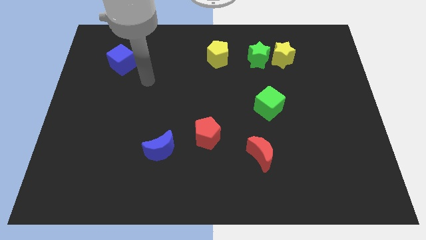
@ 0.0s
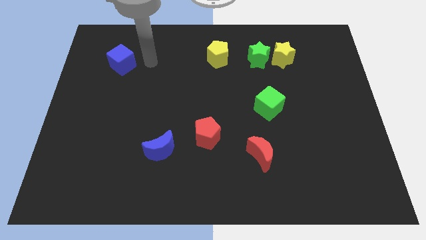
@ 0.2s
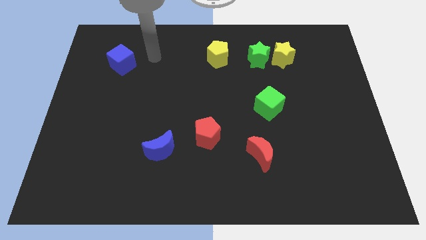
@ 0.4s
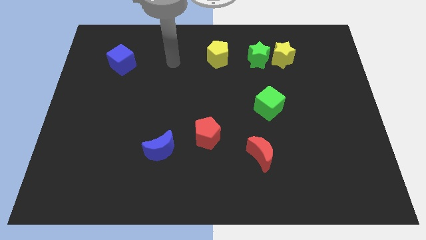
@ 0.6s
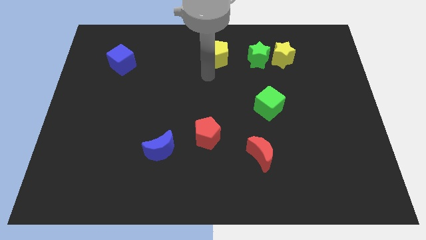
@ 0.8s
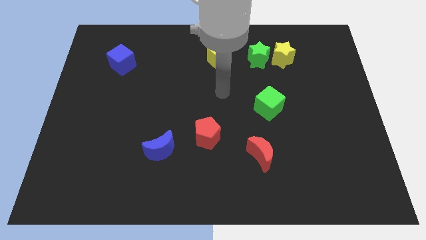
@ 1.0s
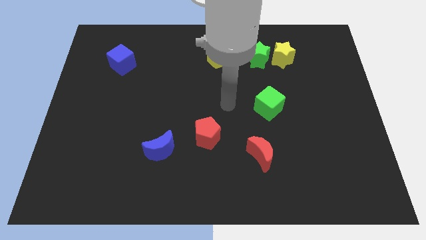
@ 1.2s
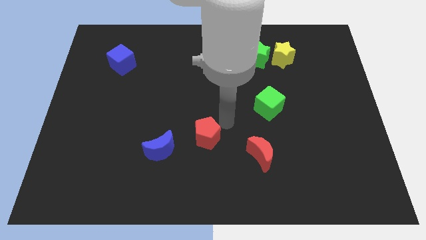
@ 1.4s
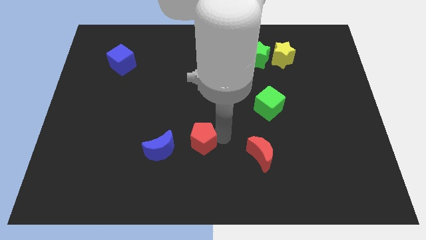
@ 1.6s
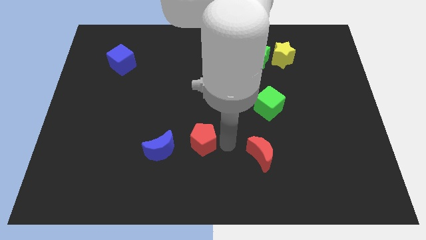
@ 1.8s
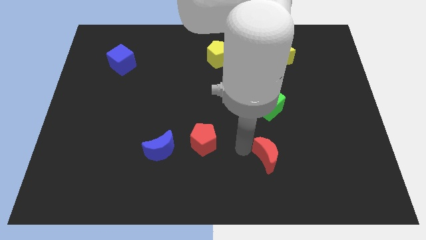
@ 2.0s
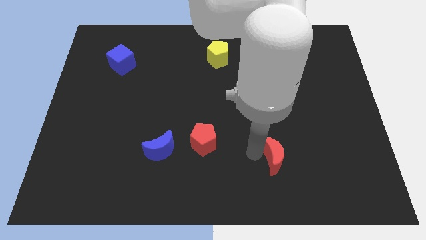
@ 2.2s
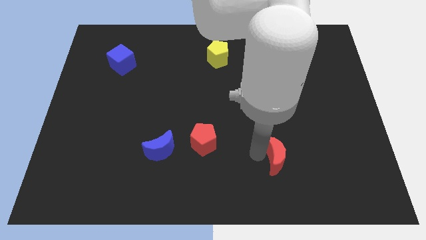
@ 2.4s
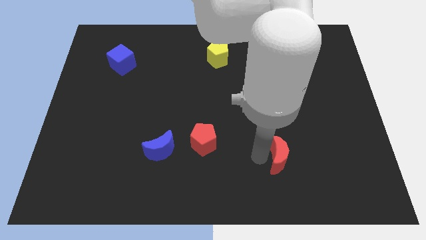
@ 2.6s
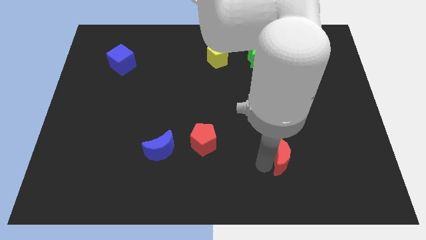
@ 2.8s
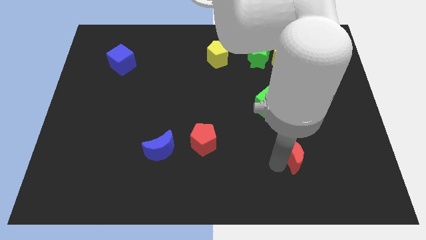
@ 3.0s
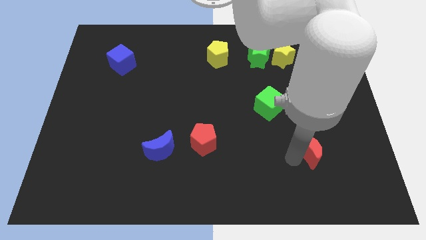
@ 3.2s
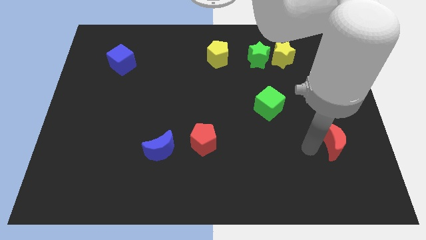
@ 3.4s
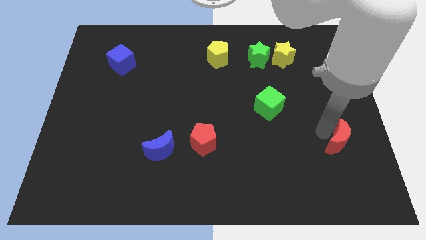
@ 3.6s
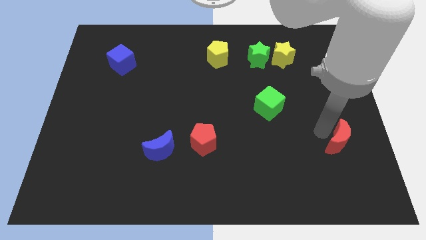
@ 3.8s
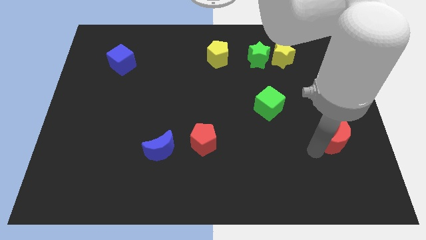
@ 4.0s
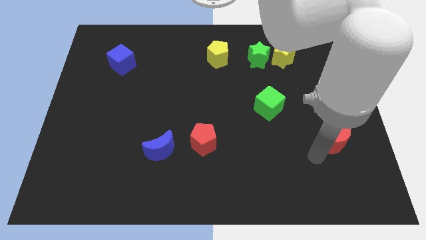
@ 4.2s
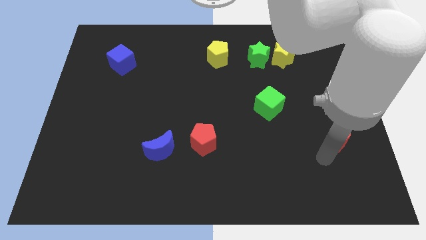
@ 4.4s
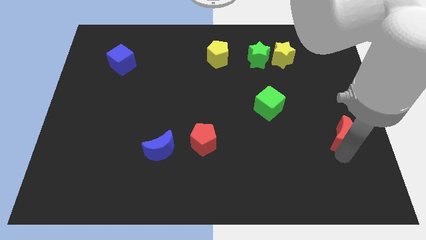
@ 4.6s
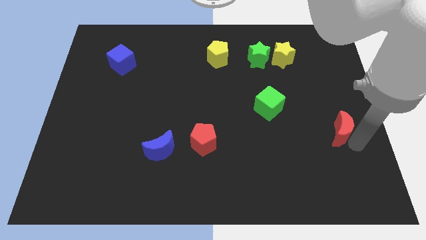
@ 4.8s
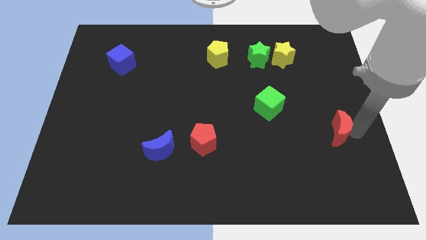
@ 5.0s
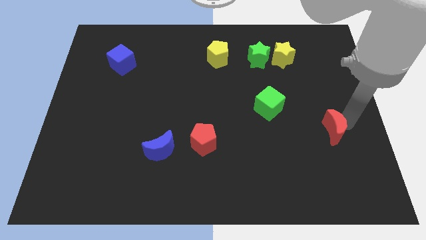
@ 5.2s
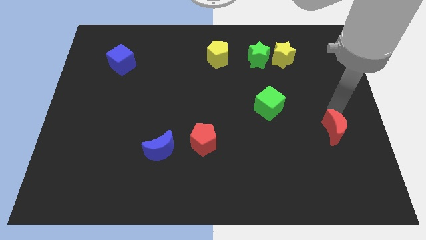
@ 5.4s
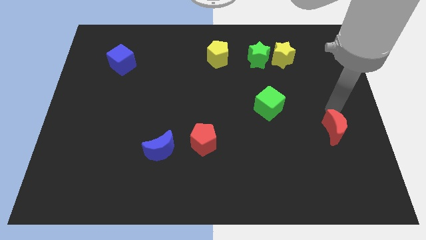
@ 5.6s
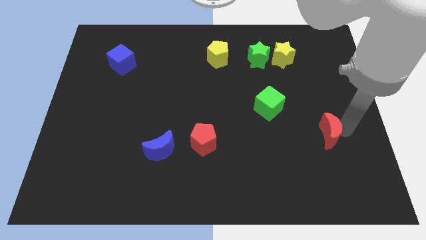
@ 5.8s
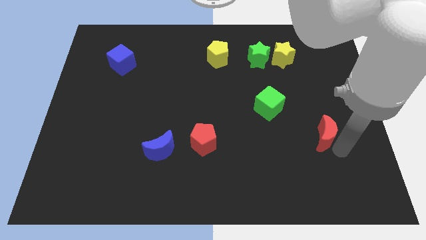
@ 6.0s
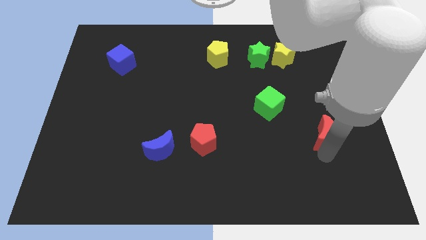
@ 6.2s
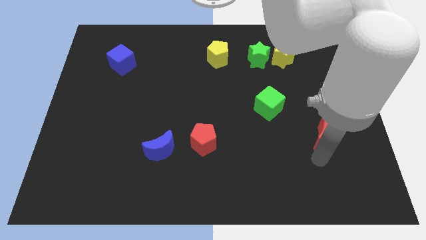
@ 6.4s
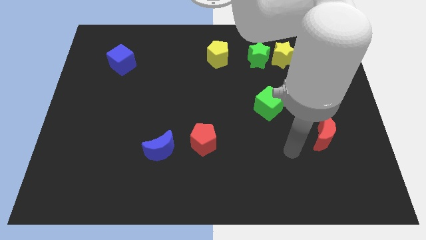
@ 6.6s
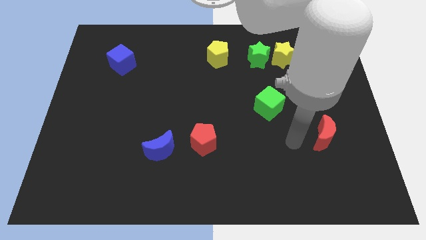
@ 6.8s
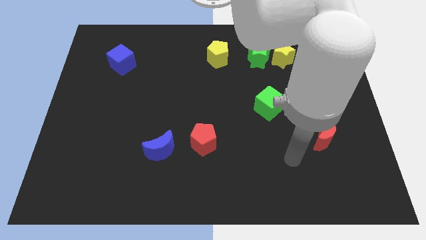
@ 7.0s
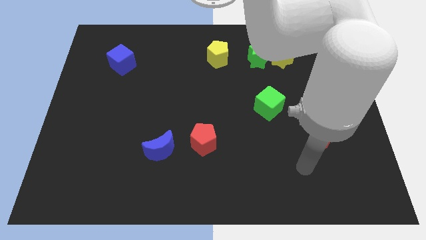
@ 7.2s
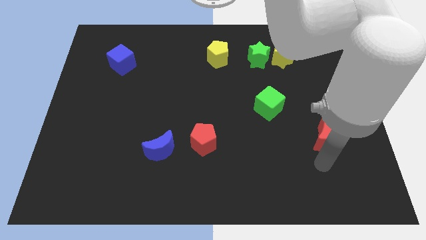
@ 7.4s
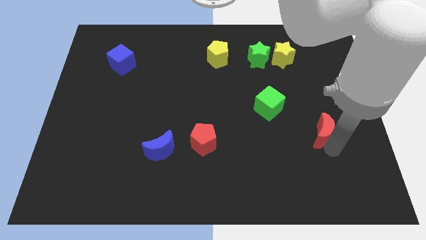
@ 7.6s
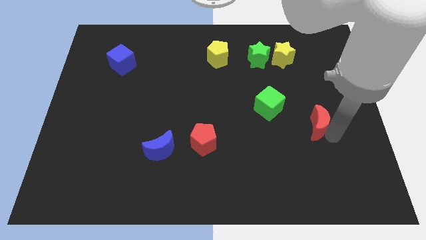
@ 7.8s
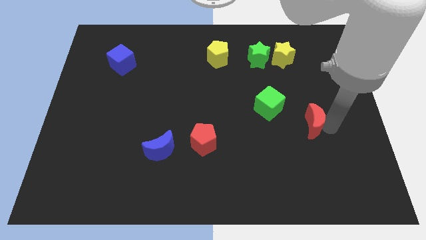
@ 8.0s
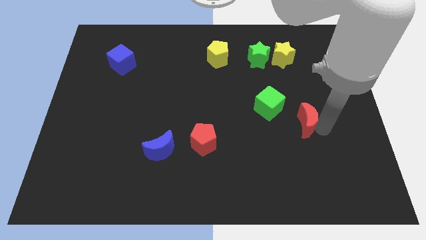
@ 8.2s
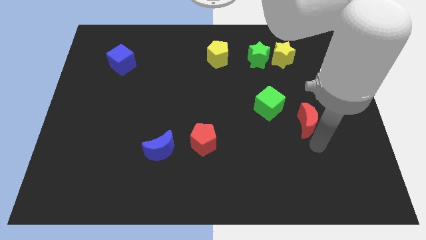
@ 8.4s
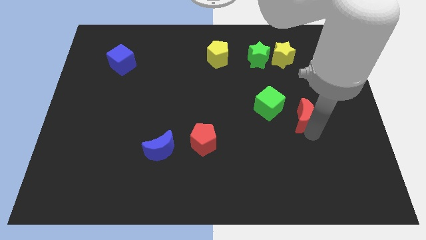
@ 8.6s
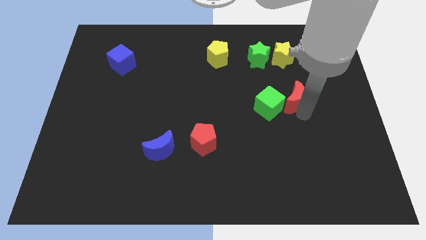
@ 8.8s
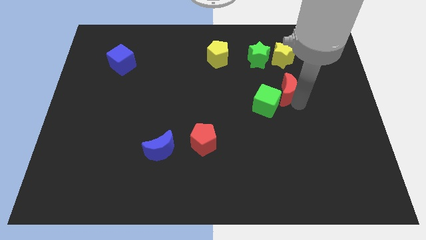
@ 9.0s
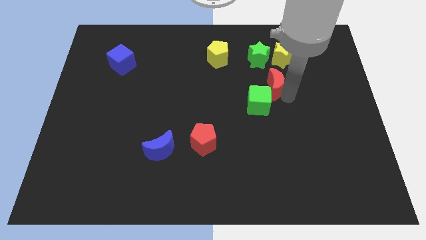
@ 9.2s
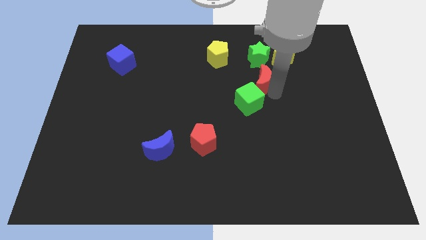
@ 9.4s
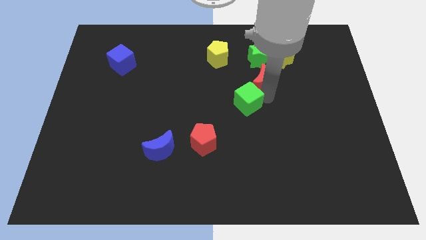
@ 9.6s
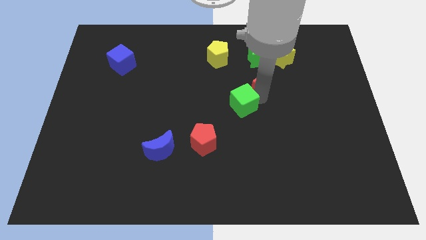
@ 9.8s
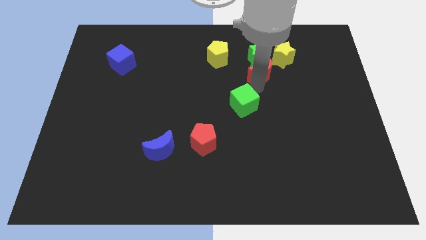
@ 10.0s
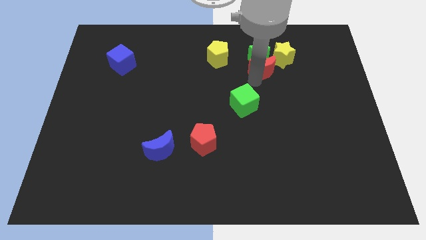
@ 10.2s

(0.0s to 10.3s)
push the red moon close to the green star

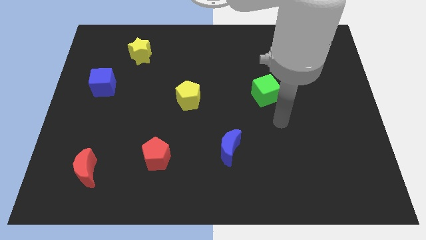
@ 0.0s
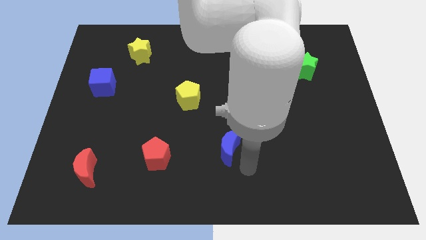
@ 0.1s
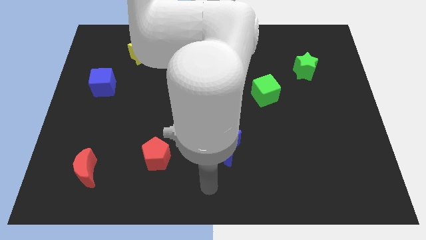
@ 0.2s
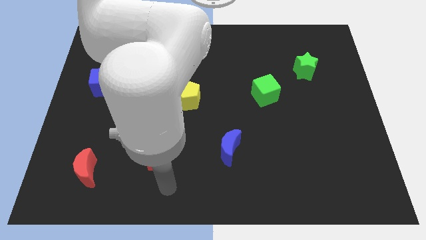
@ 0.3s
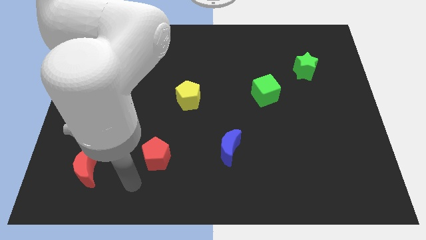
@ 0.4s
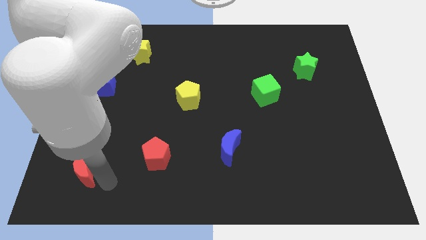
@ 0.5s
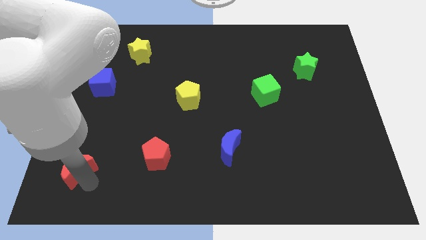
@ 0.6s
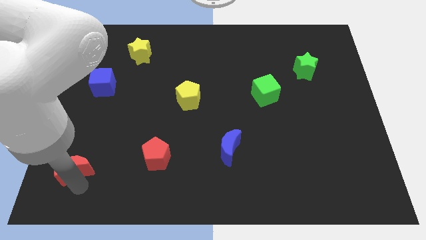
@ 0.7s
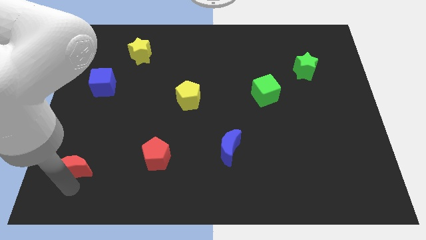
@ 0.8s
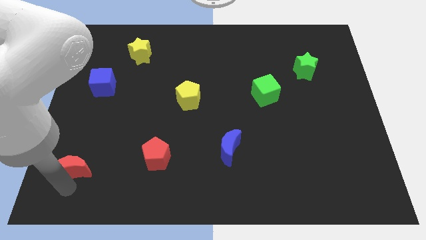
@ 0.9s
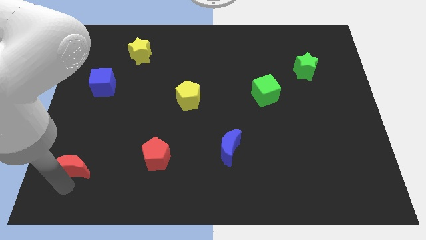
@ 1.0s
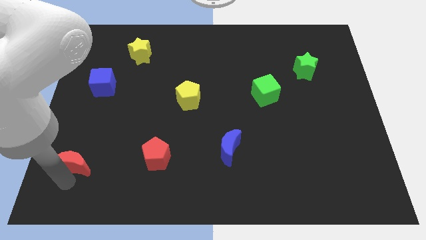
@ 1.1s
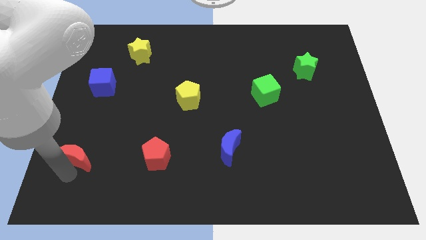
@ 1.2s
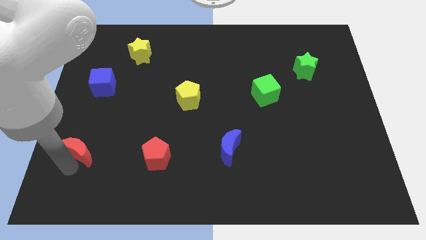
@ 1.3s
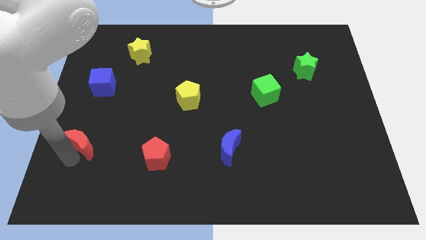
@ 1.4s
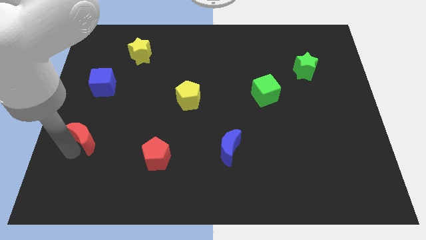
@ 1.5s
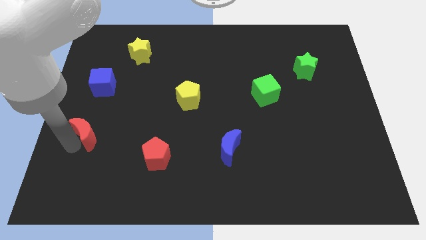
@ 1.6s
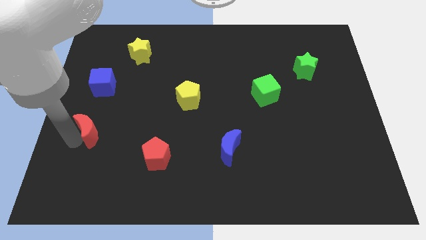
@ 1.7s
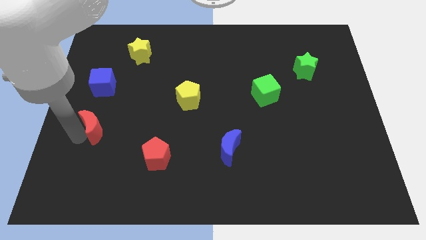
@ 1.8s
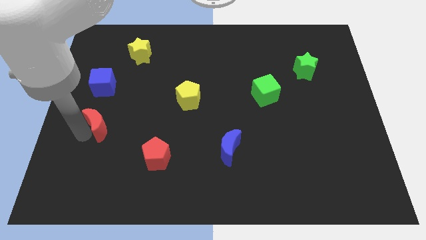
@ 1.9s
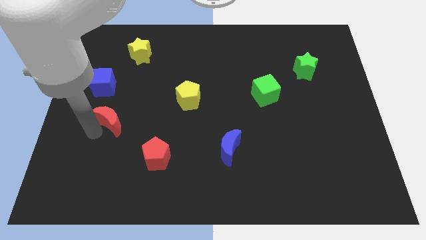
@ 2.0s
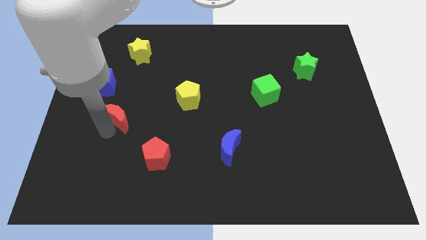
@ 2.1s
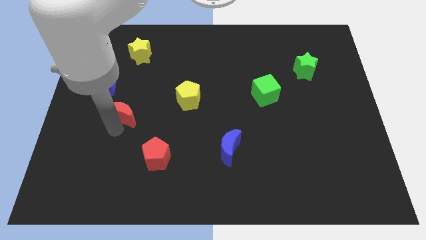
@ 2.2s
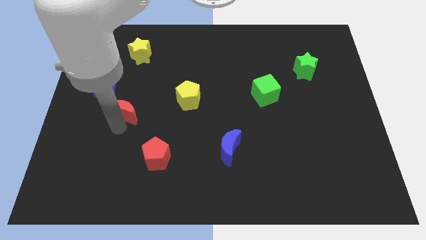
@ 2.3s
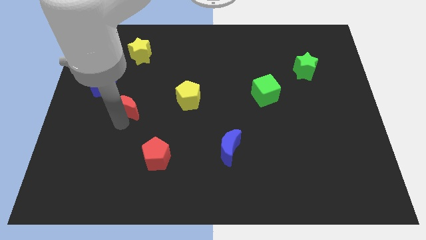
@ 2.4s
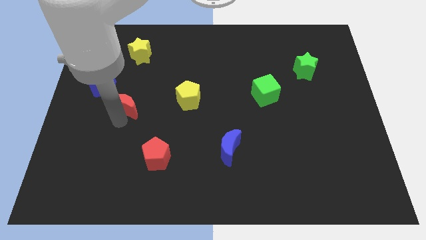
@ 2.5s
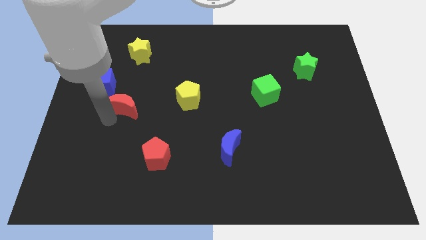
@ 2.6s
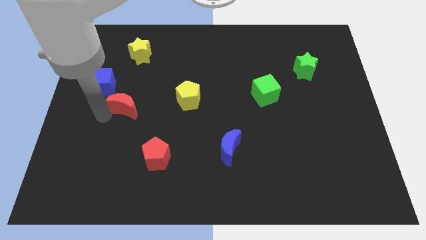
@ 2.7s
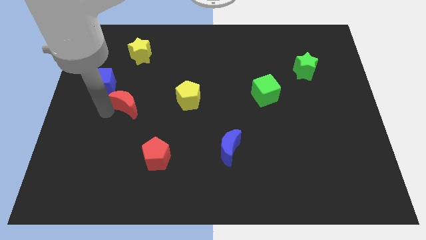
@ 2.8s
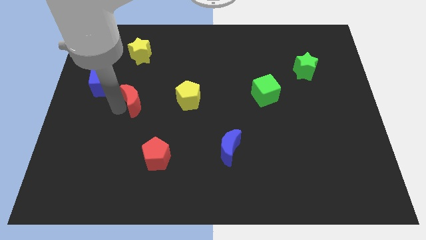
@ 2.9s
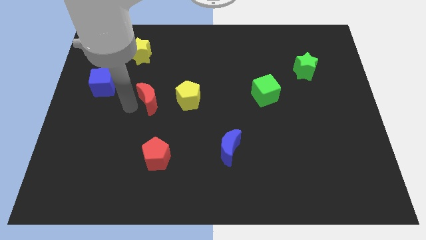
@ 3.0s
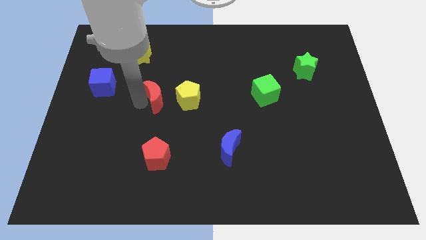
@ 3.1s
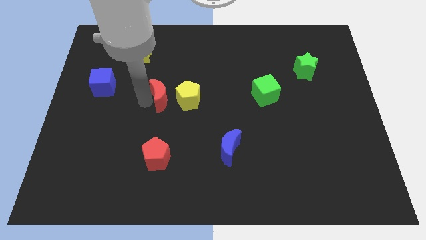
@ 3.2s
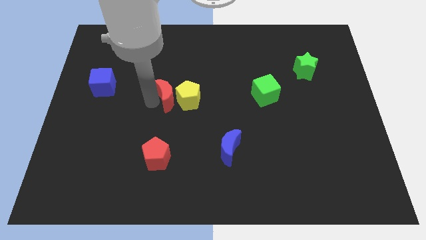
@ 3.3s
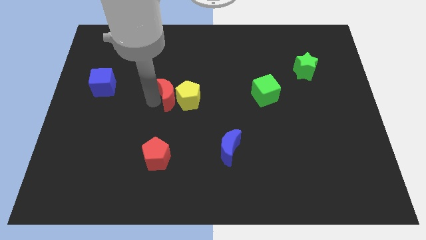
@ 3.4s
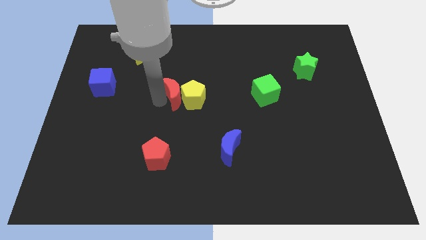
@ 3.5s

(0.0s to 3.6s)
push the red moon next to the yellow pentagon
